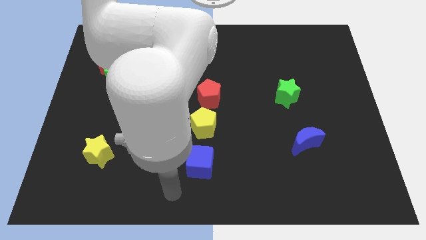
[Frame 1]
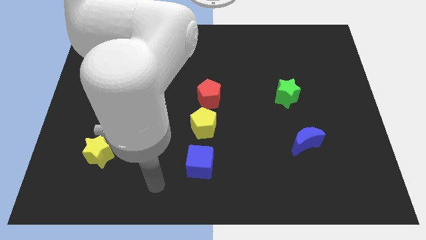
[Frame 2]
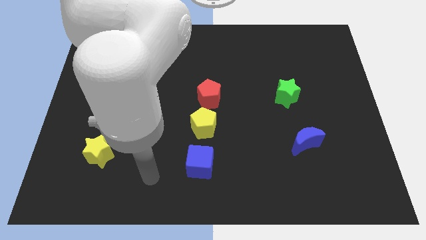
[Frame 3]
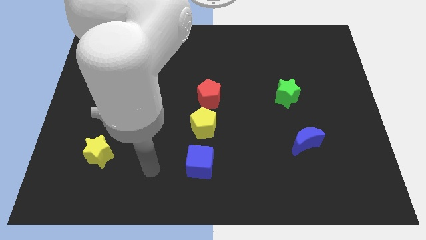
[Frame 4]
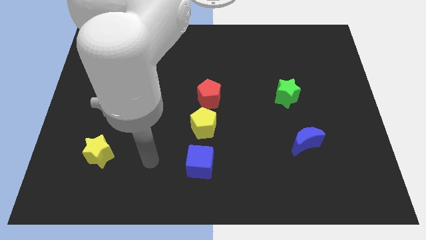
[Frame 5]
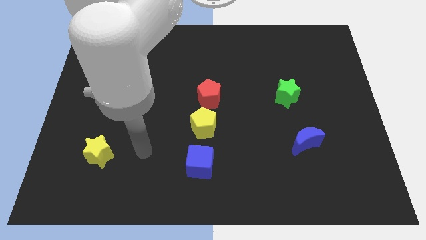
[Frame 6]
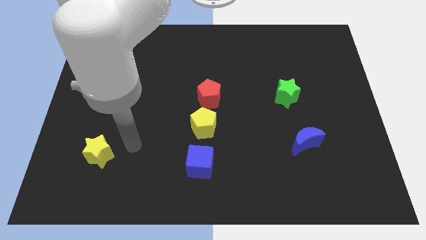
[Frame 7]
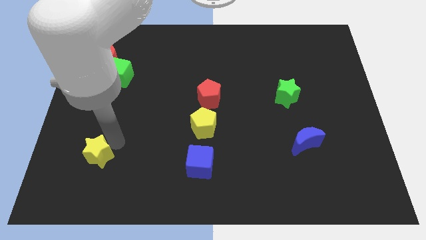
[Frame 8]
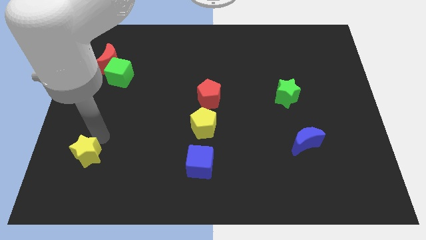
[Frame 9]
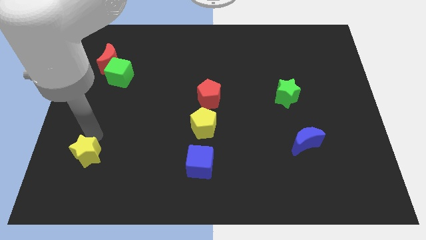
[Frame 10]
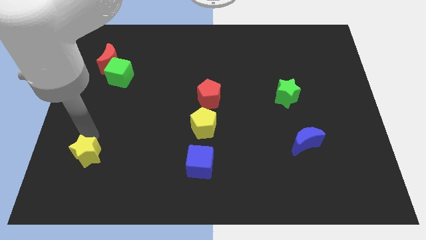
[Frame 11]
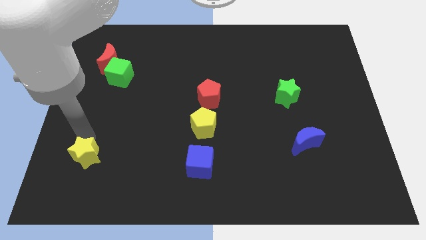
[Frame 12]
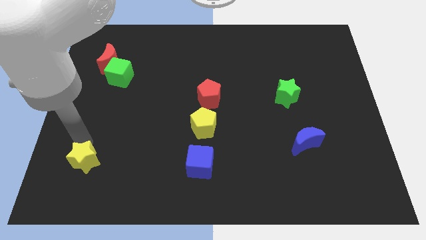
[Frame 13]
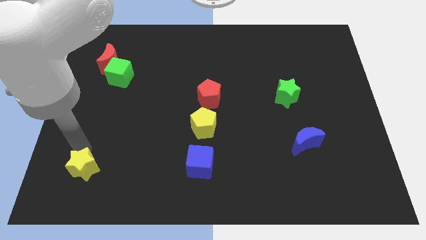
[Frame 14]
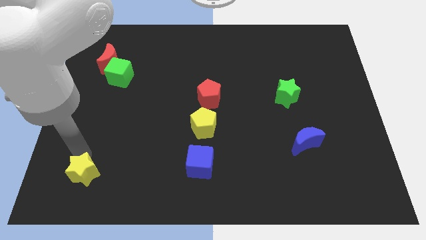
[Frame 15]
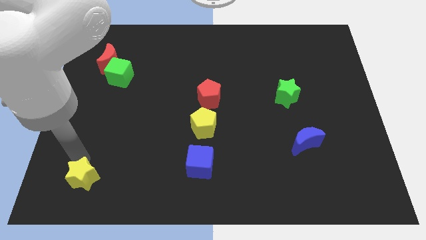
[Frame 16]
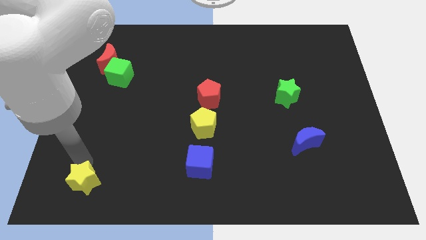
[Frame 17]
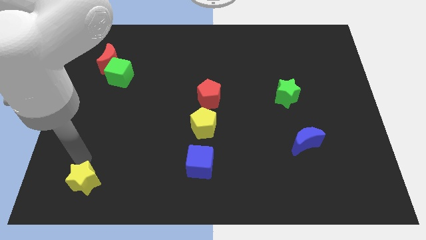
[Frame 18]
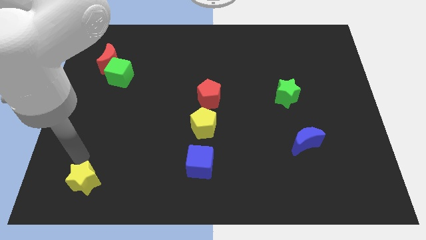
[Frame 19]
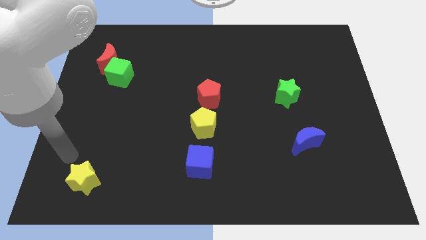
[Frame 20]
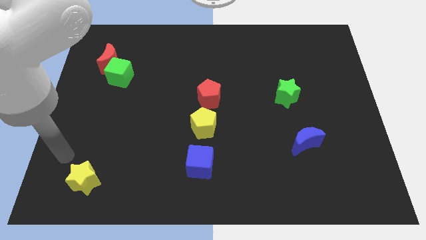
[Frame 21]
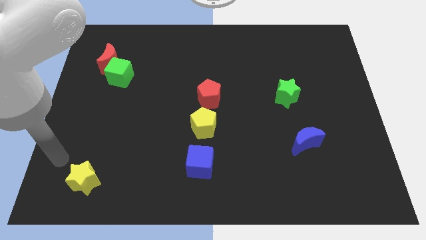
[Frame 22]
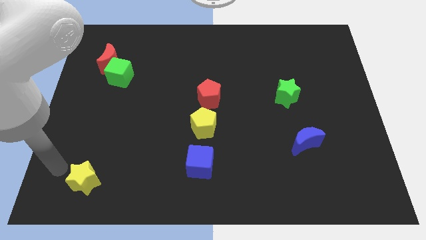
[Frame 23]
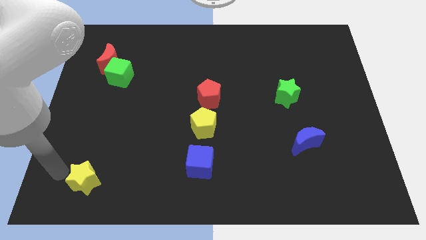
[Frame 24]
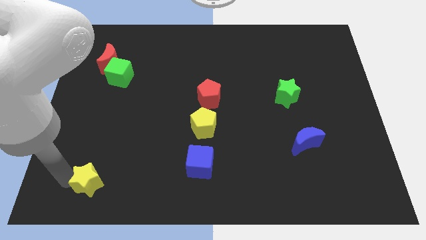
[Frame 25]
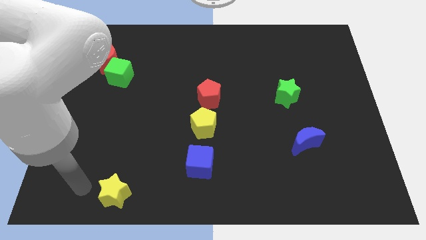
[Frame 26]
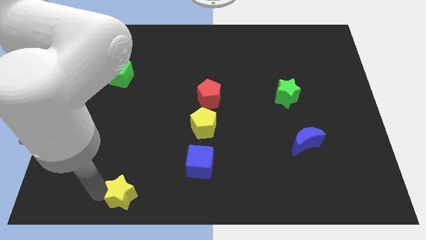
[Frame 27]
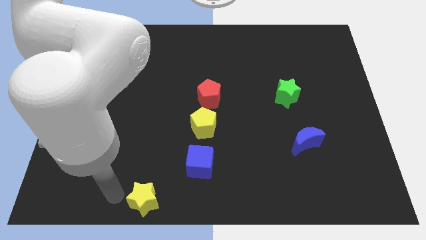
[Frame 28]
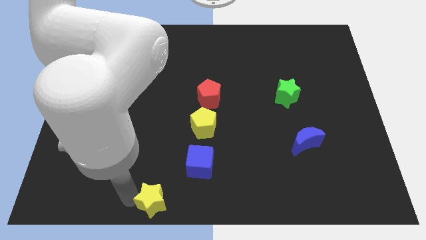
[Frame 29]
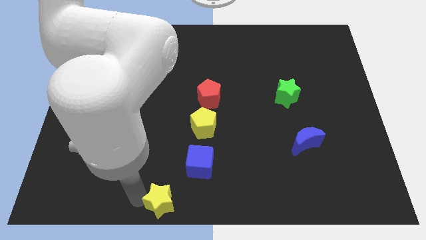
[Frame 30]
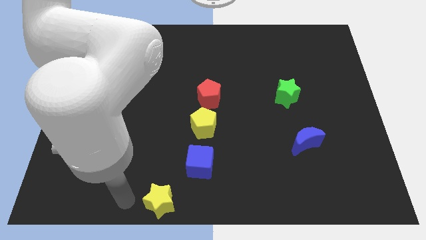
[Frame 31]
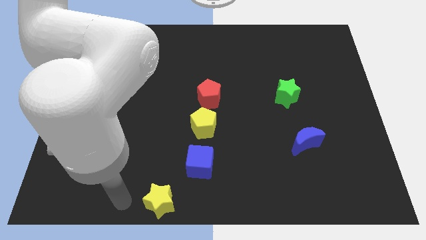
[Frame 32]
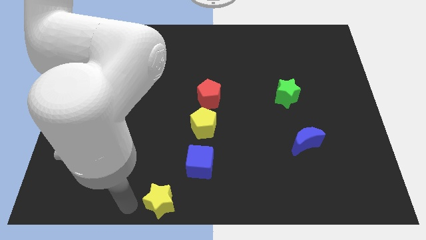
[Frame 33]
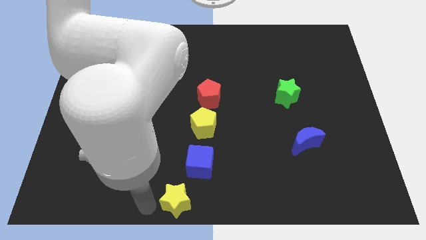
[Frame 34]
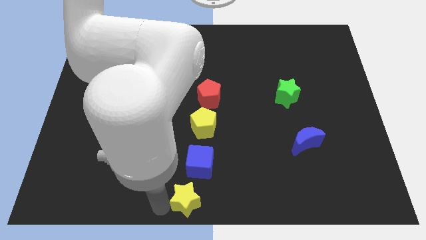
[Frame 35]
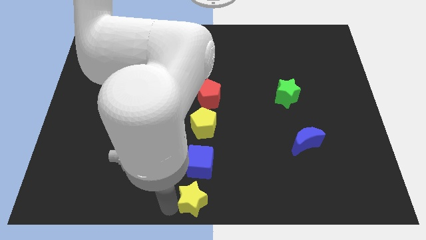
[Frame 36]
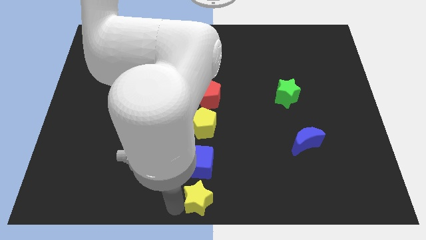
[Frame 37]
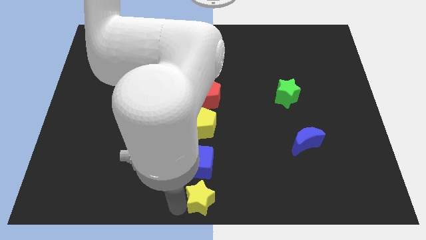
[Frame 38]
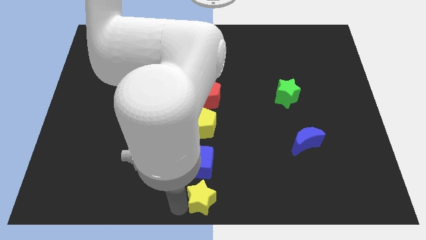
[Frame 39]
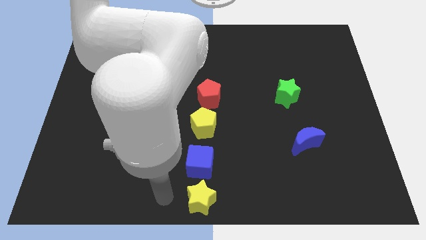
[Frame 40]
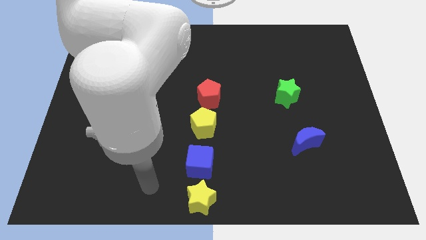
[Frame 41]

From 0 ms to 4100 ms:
place the yellow star below the blue cube

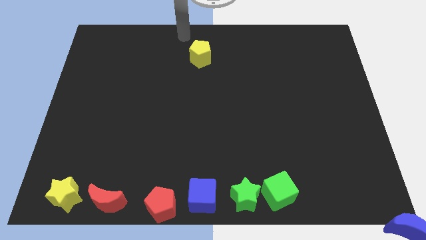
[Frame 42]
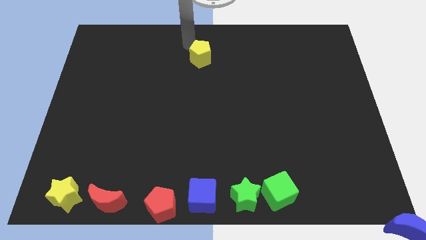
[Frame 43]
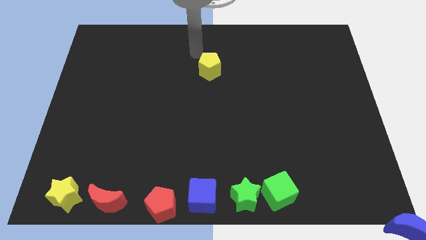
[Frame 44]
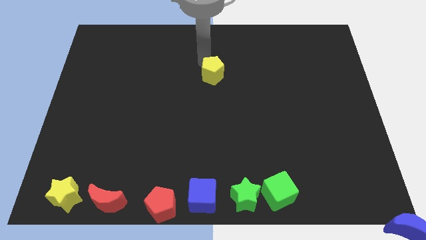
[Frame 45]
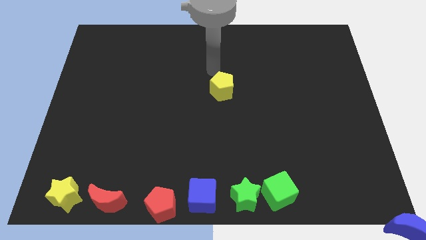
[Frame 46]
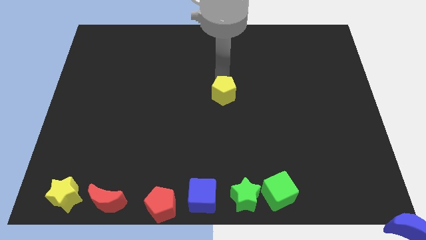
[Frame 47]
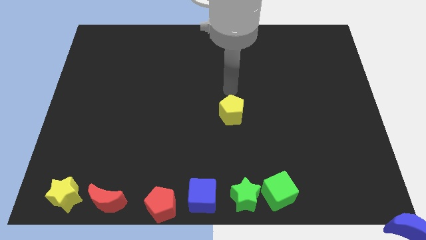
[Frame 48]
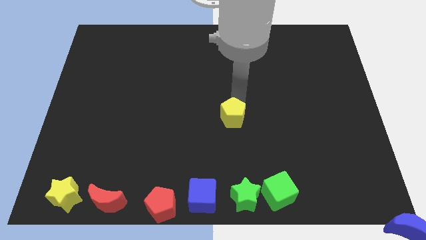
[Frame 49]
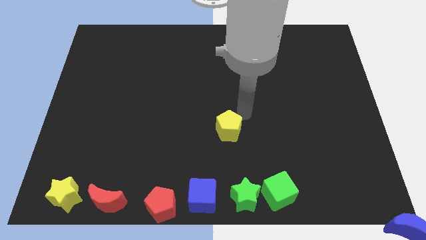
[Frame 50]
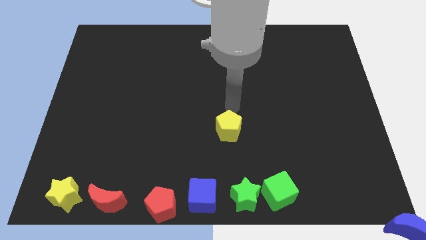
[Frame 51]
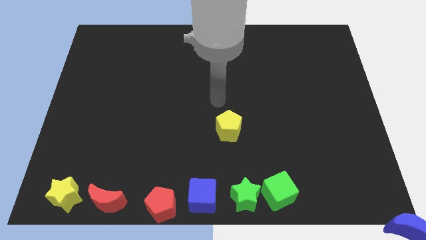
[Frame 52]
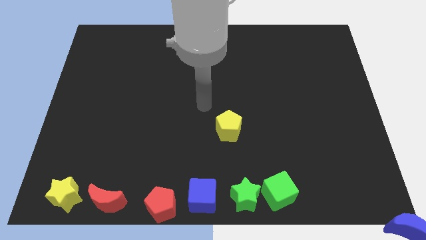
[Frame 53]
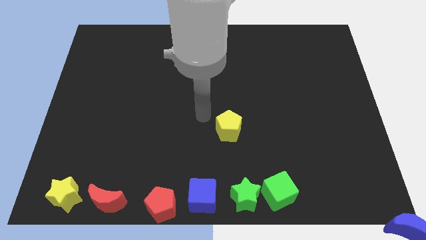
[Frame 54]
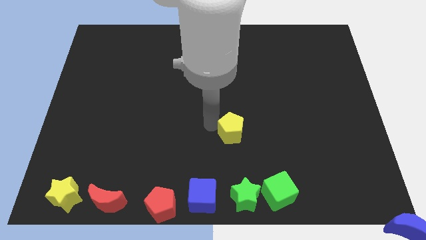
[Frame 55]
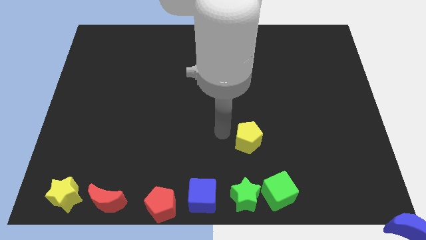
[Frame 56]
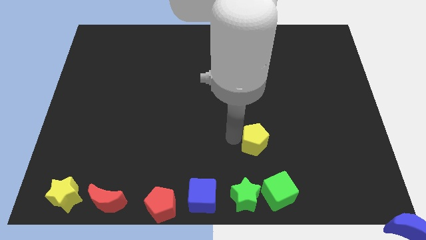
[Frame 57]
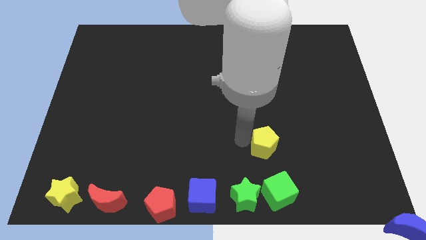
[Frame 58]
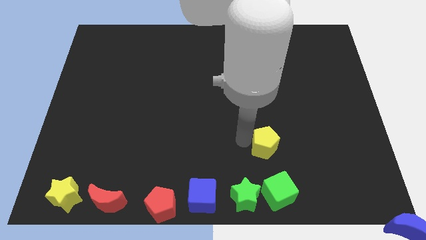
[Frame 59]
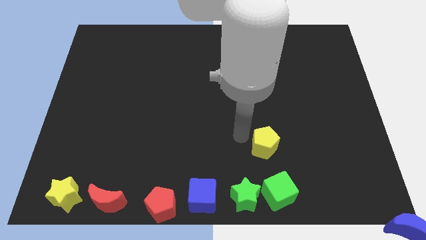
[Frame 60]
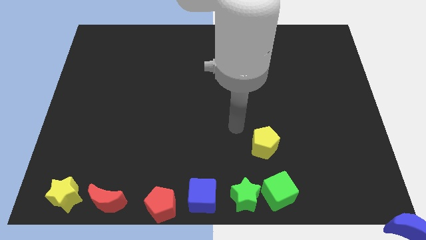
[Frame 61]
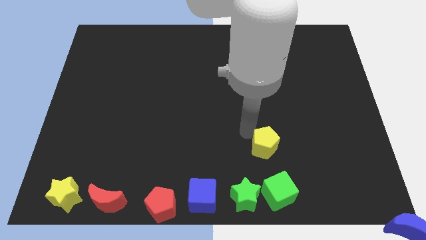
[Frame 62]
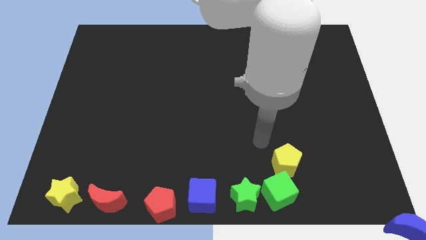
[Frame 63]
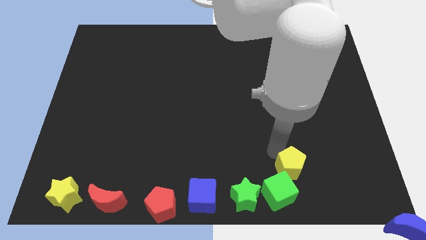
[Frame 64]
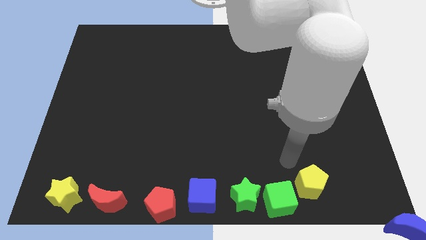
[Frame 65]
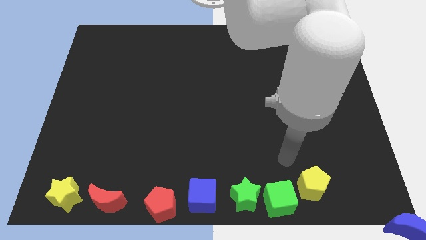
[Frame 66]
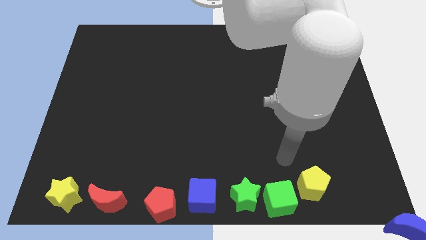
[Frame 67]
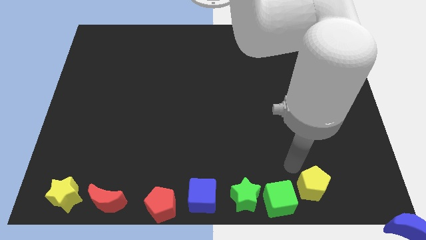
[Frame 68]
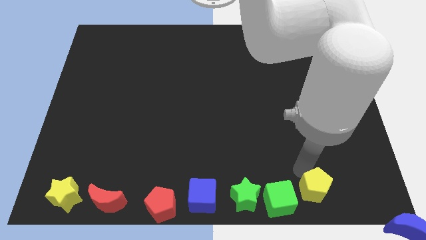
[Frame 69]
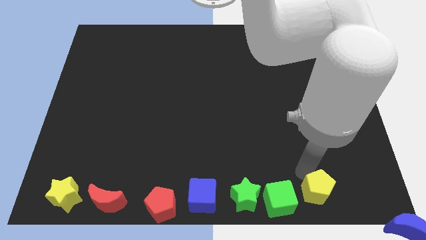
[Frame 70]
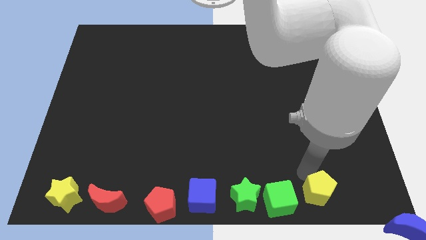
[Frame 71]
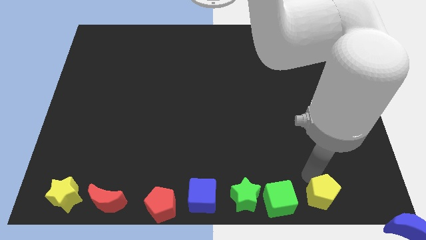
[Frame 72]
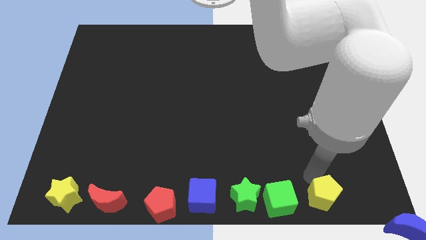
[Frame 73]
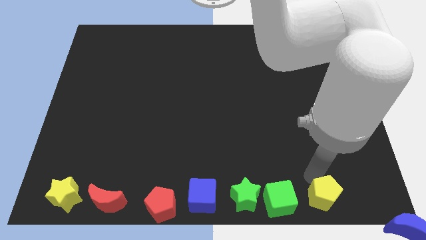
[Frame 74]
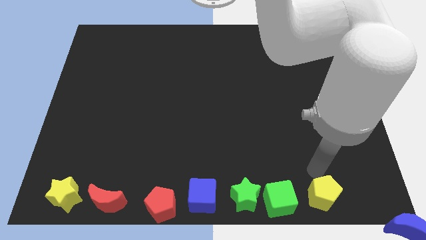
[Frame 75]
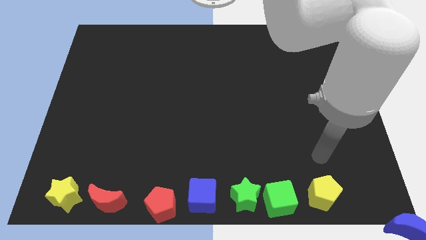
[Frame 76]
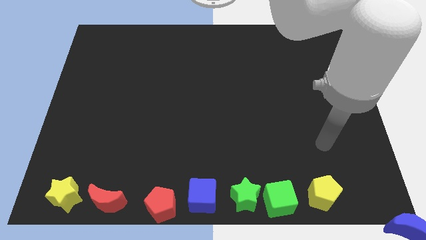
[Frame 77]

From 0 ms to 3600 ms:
place the yellow pentagon to the right of the green cube

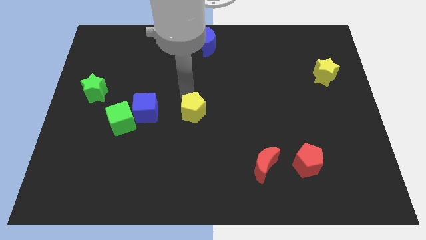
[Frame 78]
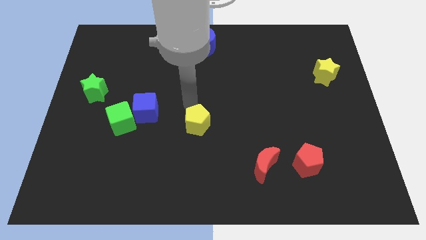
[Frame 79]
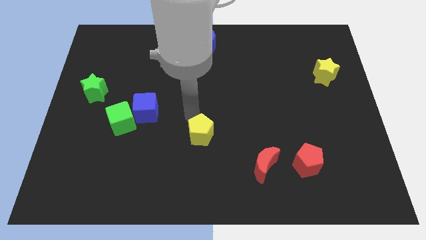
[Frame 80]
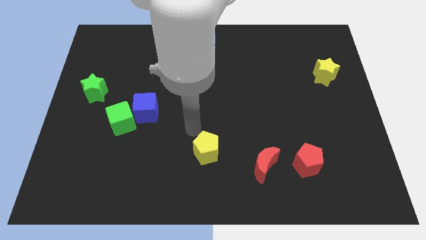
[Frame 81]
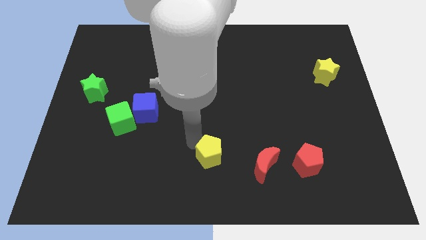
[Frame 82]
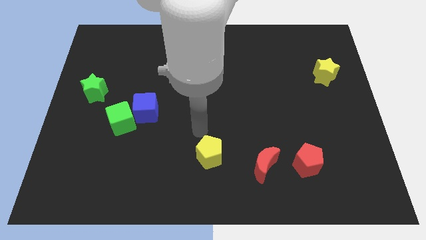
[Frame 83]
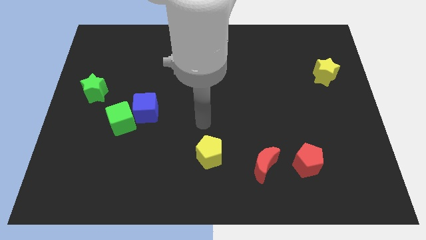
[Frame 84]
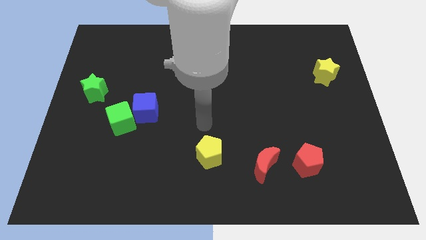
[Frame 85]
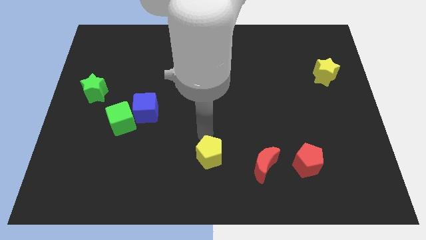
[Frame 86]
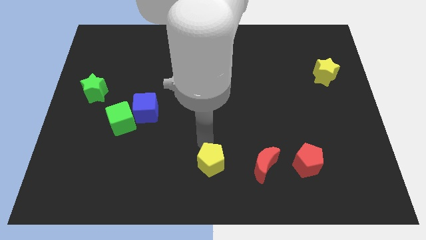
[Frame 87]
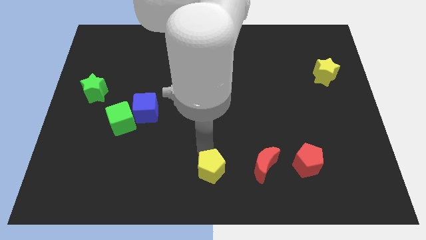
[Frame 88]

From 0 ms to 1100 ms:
drag yellow pentagon slightly to the bottom

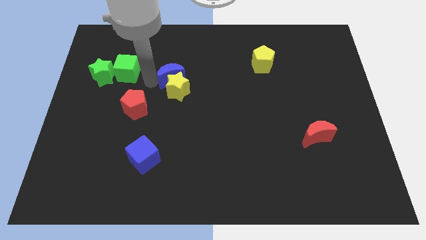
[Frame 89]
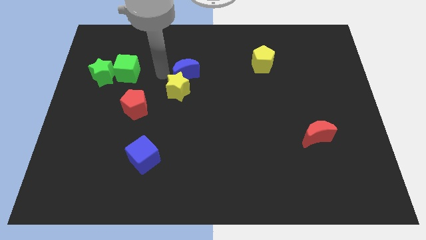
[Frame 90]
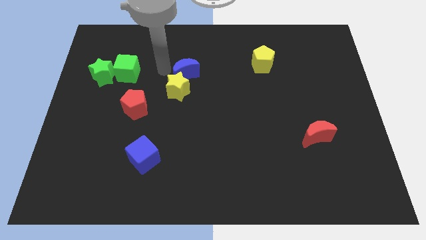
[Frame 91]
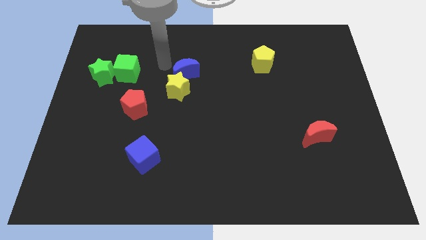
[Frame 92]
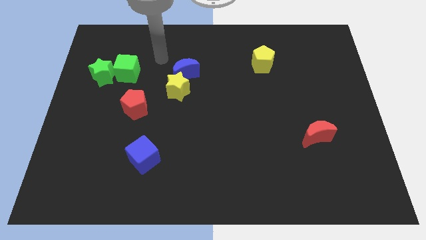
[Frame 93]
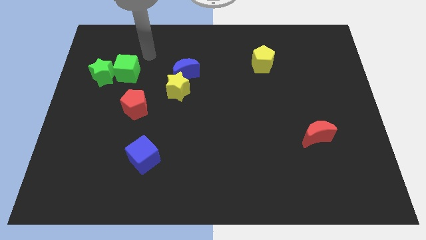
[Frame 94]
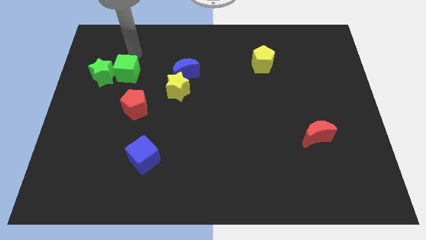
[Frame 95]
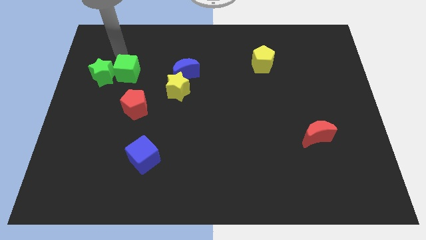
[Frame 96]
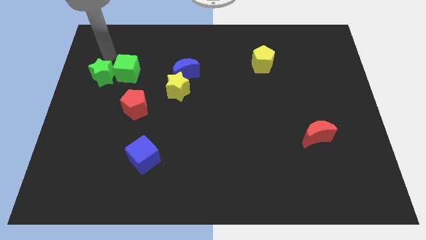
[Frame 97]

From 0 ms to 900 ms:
push the blue crescent slightly to the right
